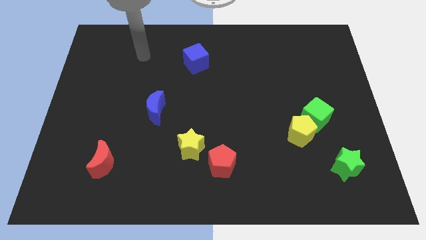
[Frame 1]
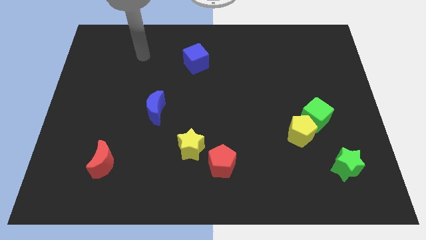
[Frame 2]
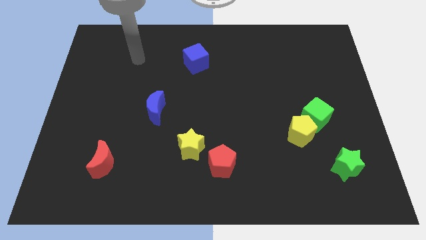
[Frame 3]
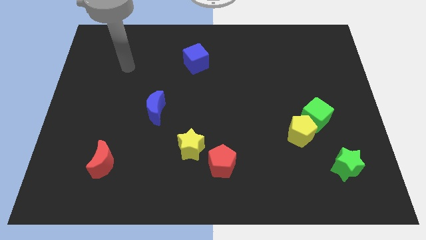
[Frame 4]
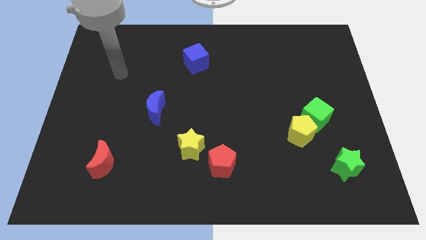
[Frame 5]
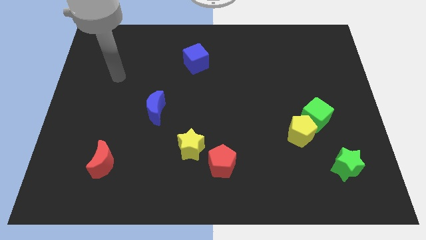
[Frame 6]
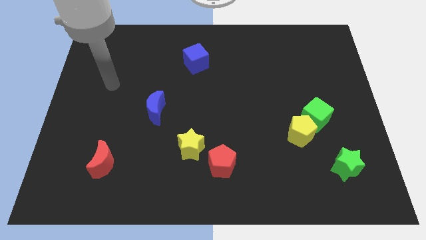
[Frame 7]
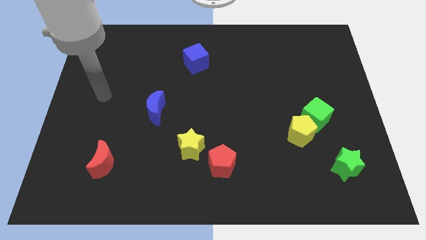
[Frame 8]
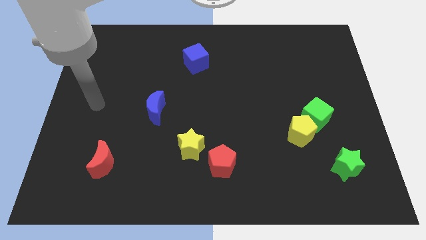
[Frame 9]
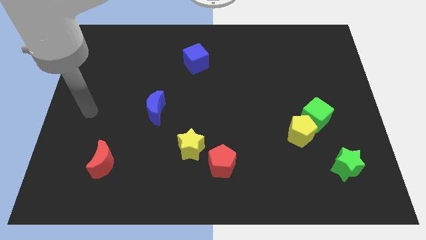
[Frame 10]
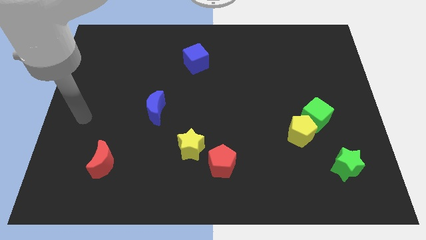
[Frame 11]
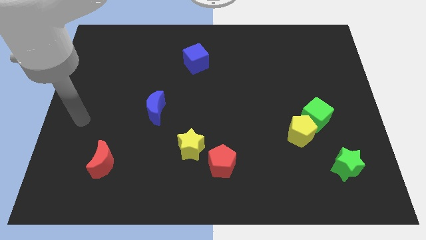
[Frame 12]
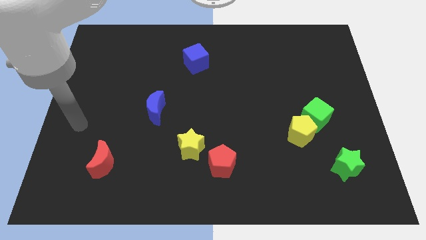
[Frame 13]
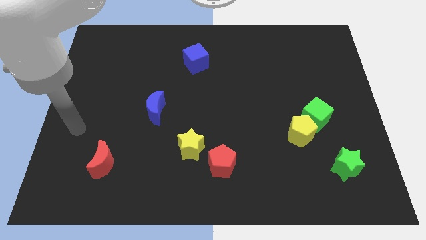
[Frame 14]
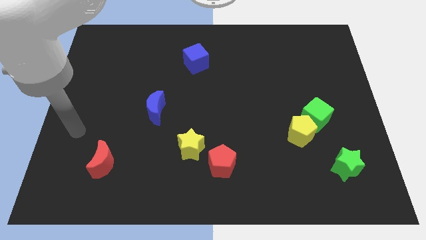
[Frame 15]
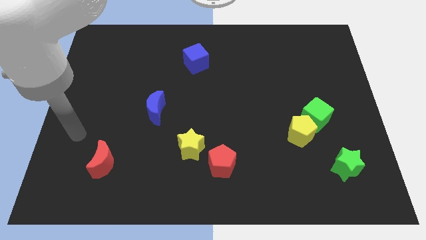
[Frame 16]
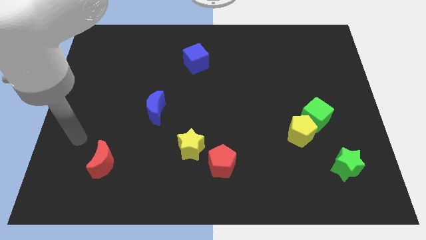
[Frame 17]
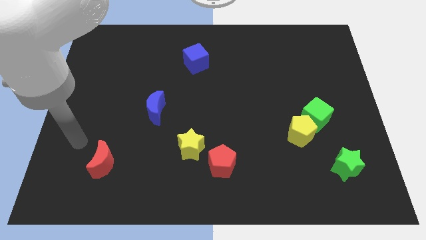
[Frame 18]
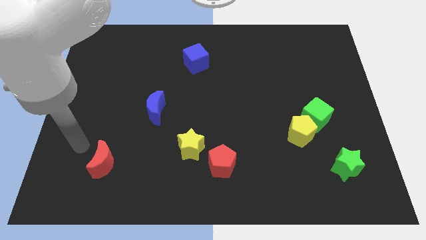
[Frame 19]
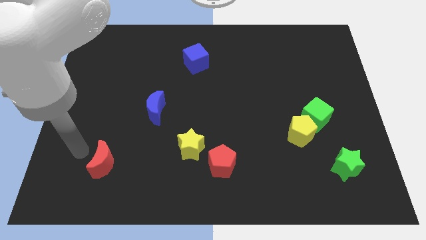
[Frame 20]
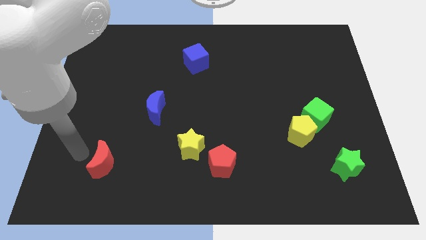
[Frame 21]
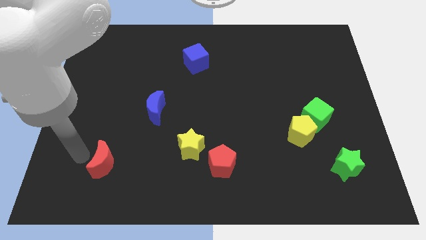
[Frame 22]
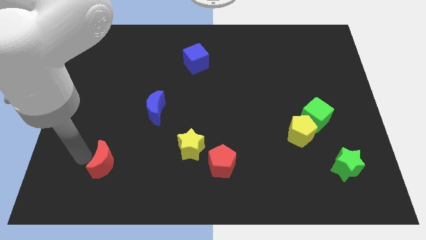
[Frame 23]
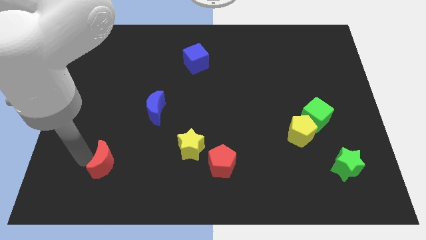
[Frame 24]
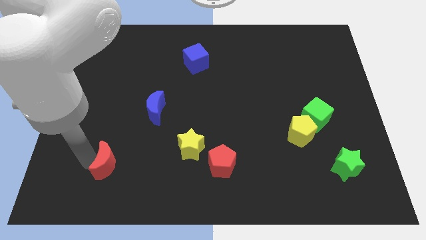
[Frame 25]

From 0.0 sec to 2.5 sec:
place the arm left to the red moon

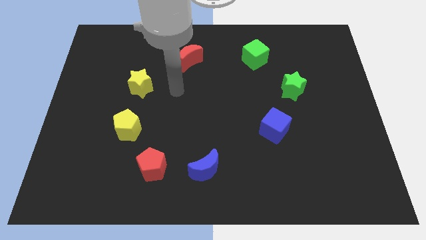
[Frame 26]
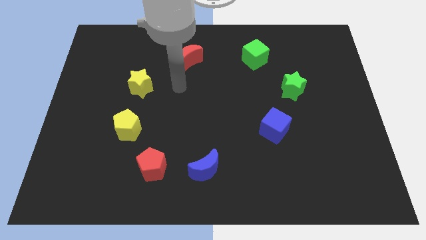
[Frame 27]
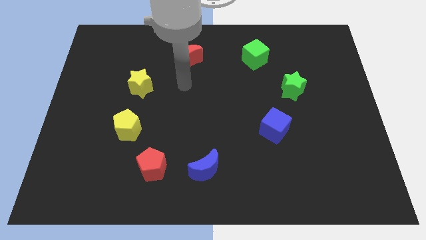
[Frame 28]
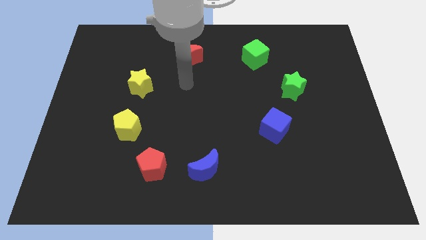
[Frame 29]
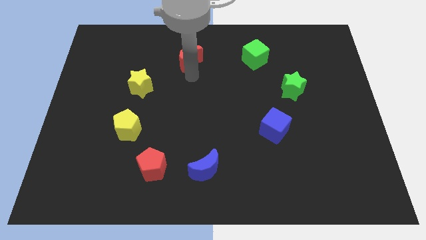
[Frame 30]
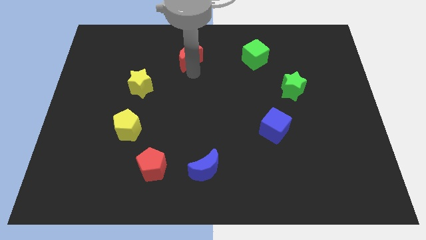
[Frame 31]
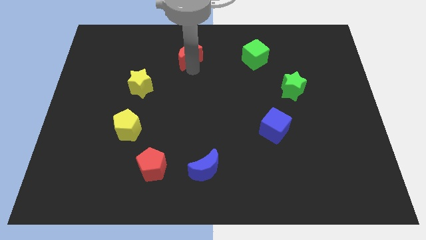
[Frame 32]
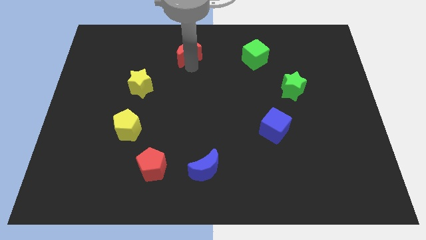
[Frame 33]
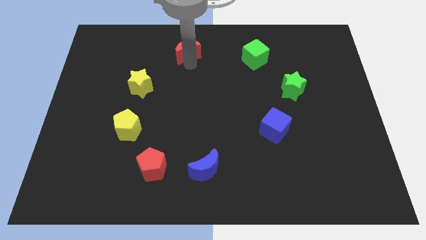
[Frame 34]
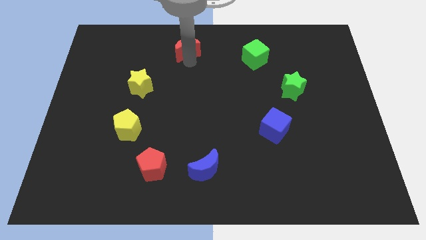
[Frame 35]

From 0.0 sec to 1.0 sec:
push the red moon slightly upward

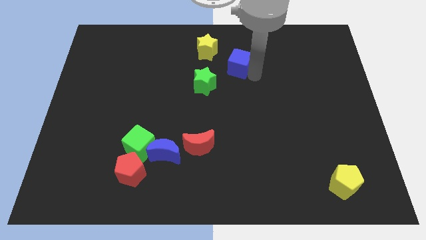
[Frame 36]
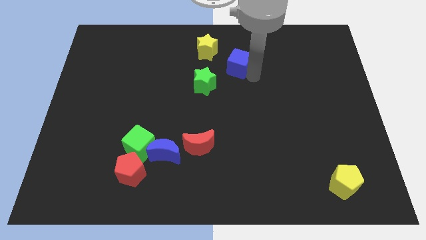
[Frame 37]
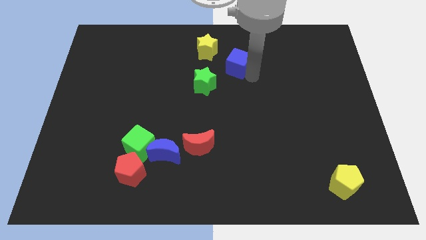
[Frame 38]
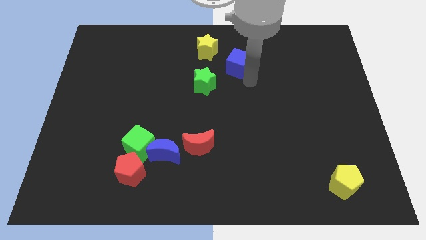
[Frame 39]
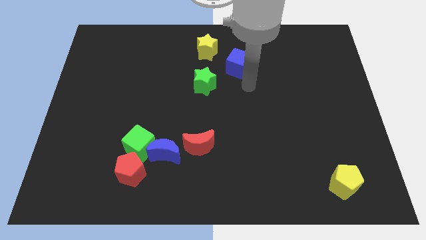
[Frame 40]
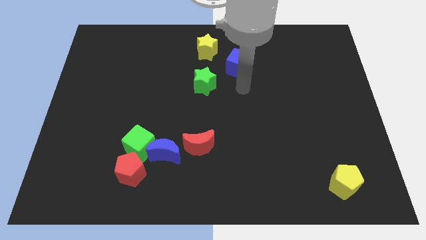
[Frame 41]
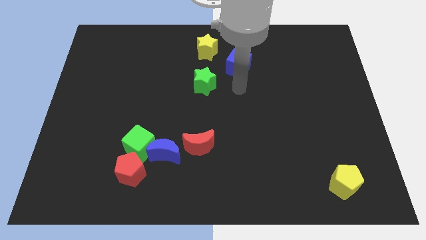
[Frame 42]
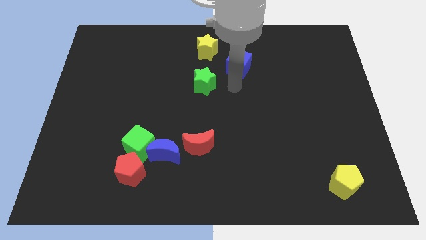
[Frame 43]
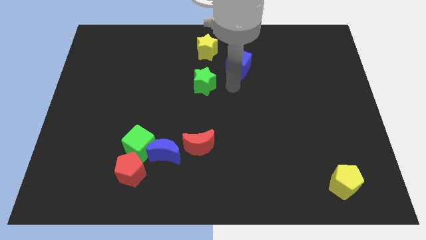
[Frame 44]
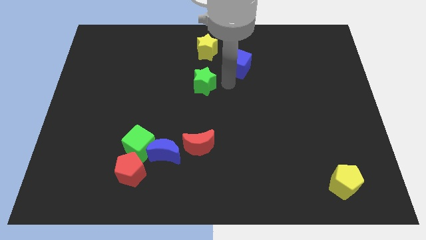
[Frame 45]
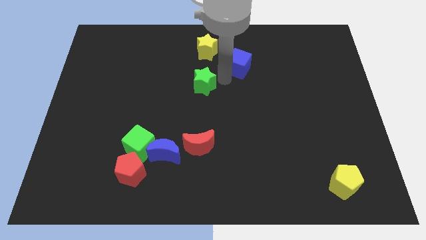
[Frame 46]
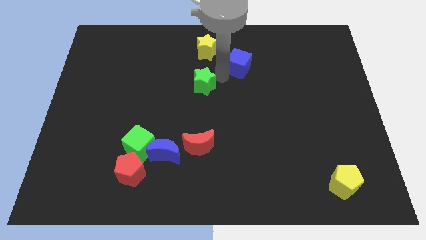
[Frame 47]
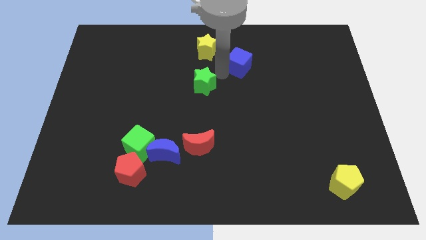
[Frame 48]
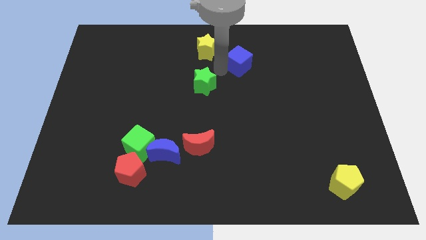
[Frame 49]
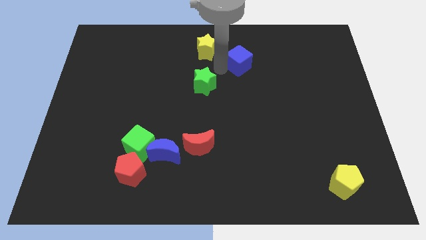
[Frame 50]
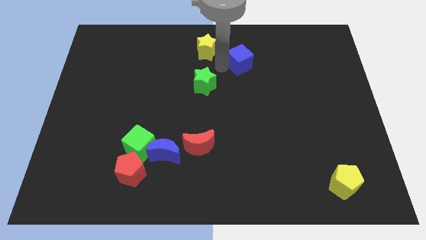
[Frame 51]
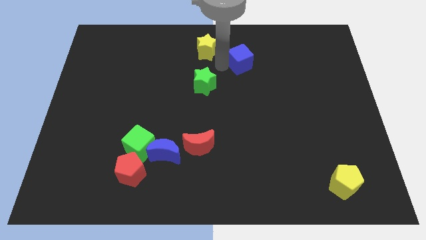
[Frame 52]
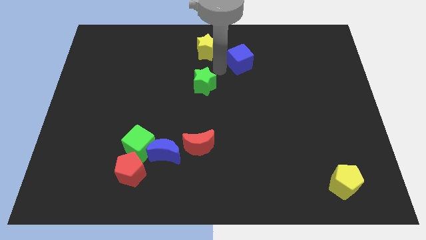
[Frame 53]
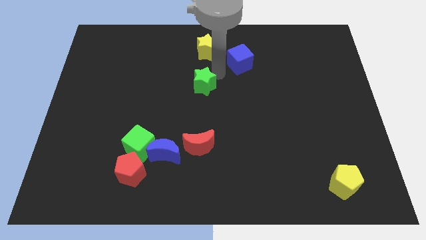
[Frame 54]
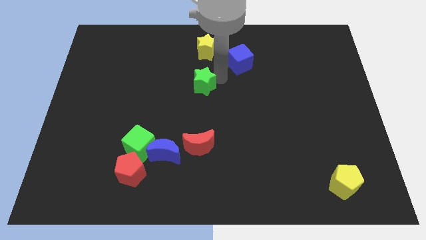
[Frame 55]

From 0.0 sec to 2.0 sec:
put the blue cube diagonally on the bottom right of the yellow star

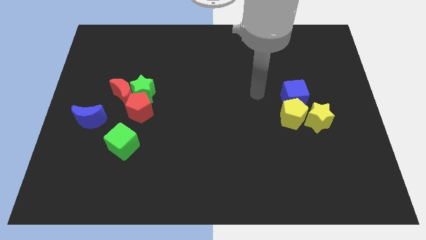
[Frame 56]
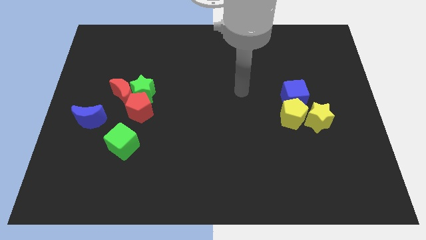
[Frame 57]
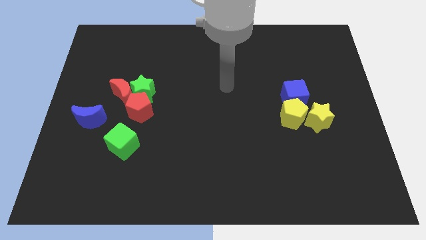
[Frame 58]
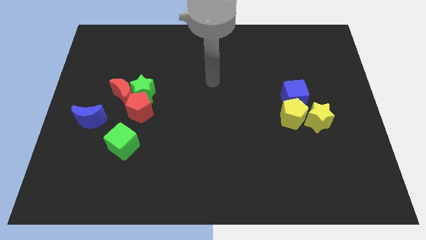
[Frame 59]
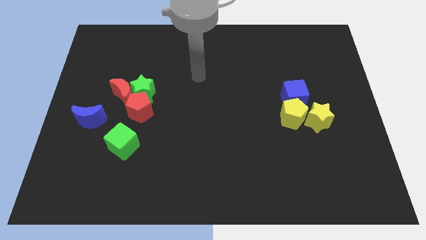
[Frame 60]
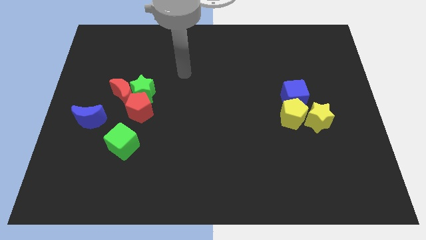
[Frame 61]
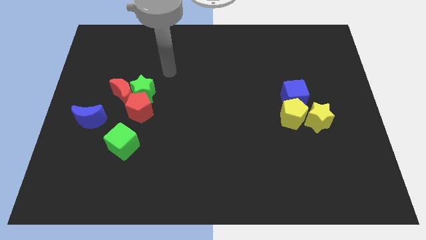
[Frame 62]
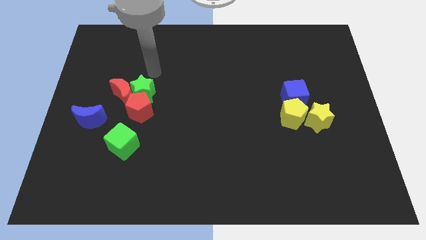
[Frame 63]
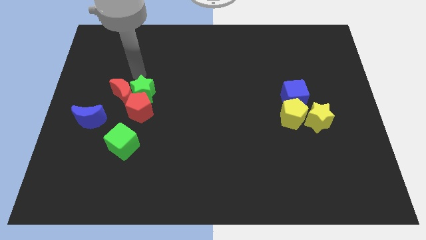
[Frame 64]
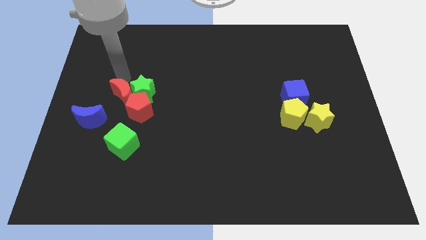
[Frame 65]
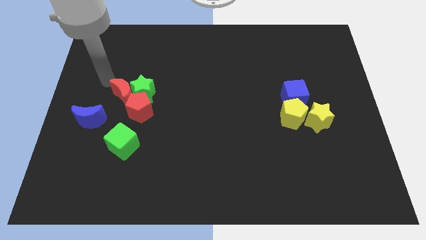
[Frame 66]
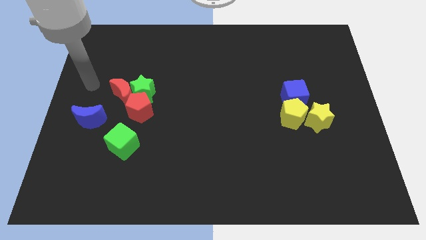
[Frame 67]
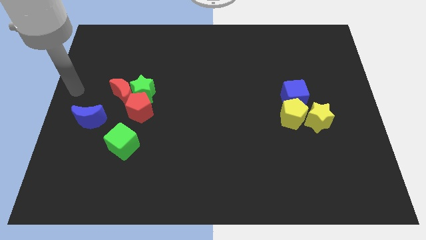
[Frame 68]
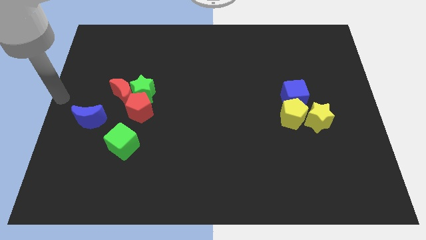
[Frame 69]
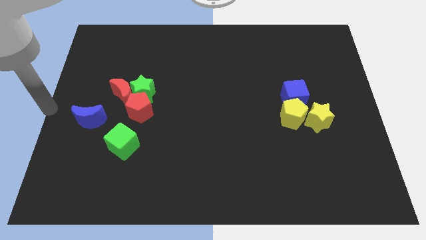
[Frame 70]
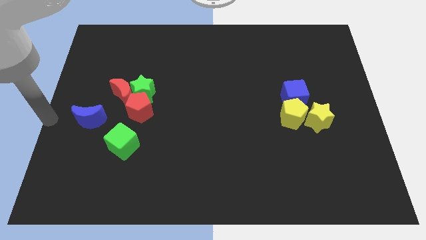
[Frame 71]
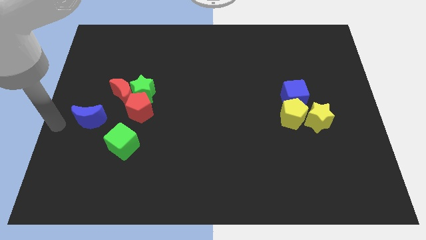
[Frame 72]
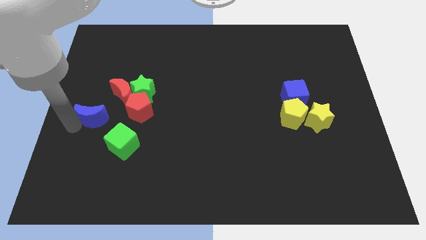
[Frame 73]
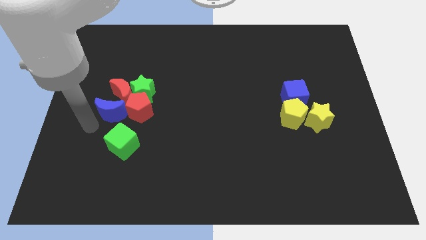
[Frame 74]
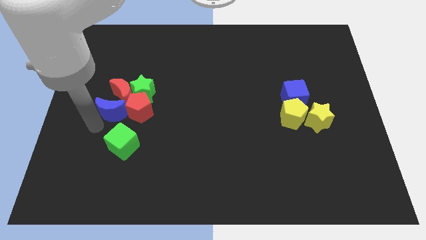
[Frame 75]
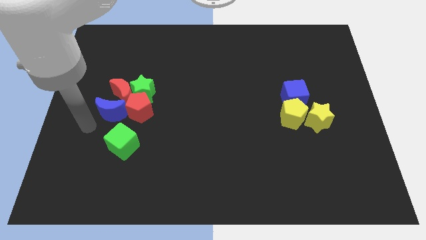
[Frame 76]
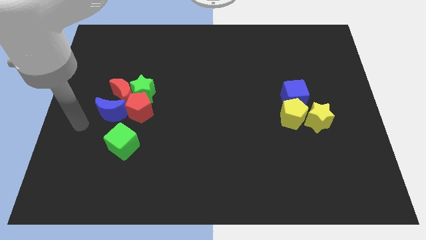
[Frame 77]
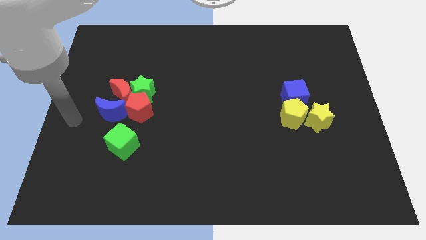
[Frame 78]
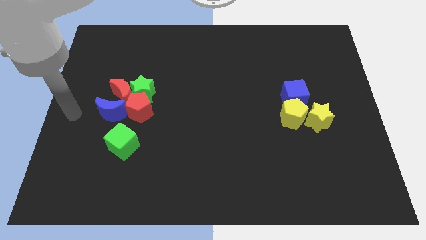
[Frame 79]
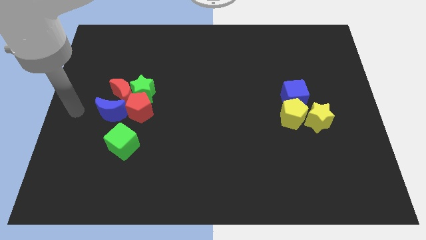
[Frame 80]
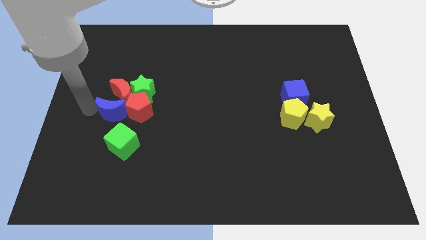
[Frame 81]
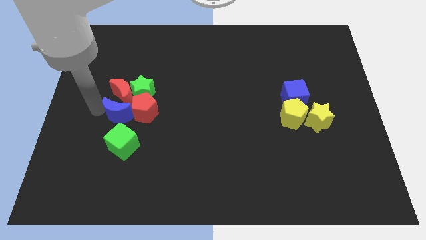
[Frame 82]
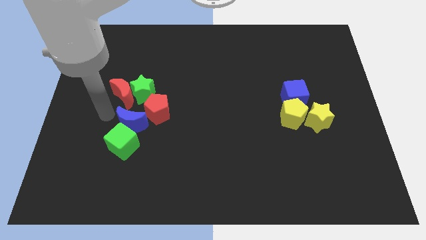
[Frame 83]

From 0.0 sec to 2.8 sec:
push the blue moon into the red pentagon

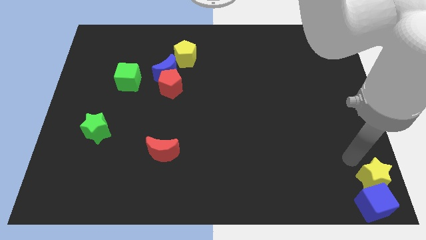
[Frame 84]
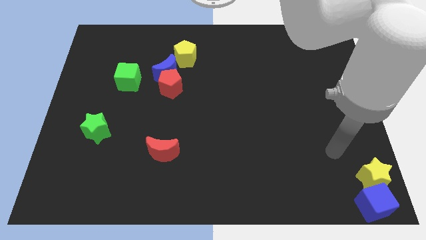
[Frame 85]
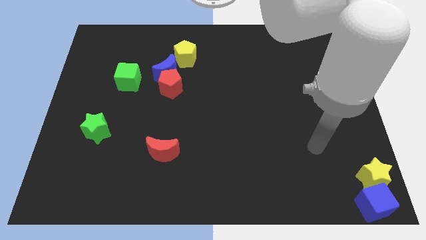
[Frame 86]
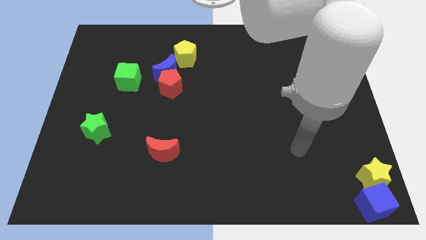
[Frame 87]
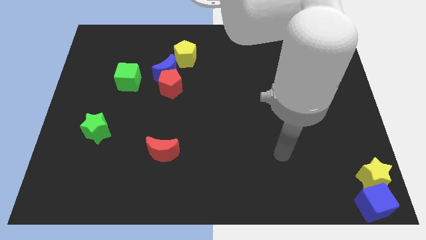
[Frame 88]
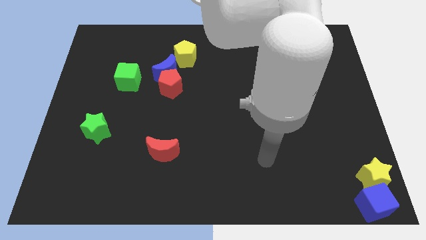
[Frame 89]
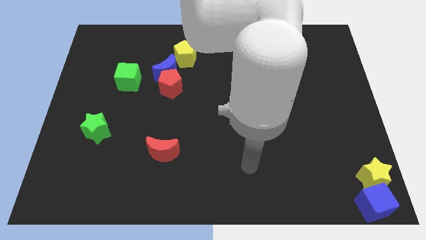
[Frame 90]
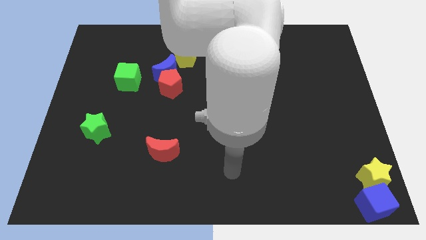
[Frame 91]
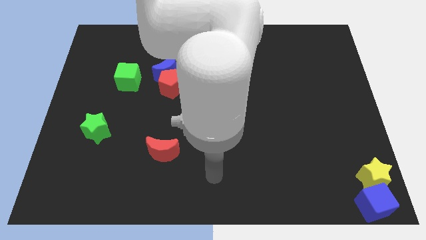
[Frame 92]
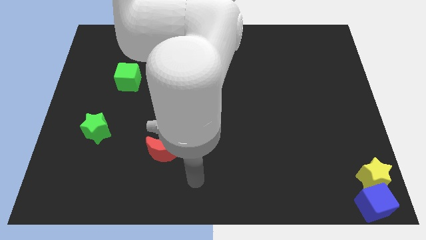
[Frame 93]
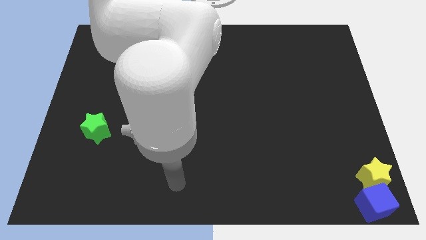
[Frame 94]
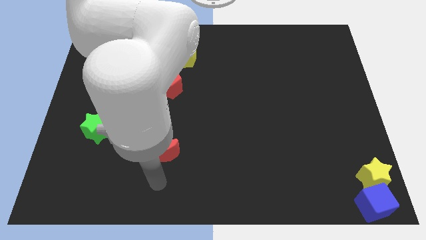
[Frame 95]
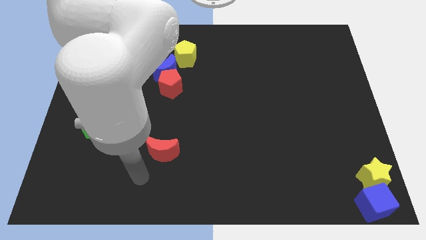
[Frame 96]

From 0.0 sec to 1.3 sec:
move your hand towards the red crescent
